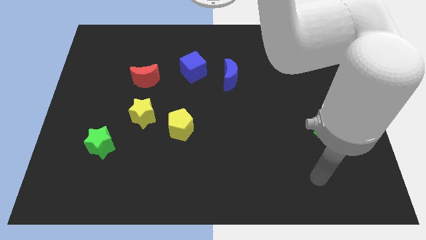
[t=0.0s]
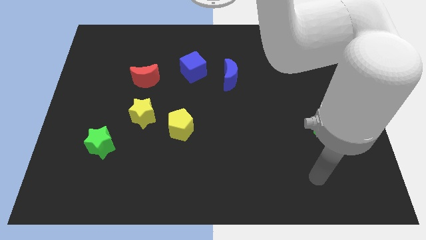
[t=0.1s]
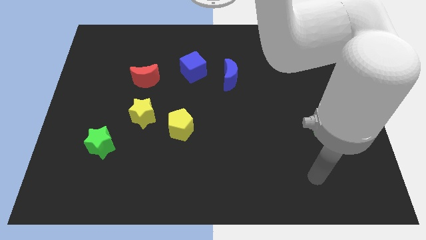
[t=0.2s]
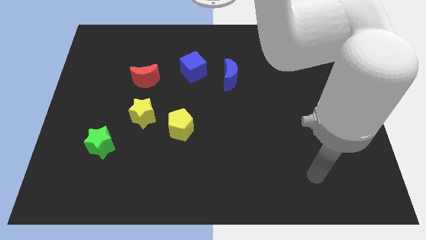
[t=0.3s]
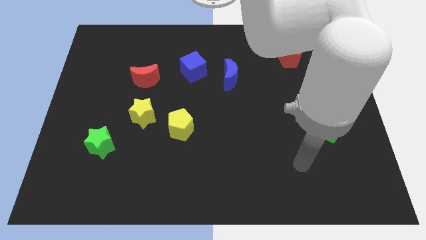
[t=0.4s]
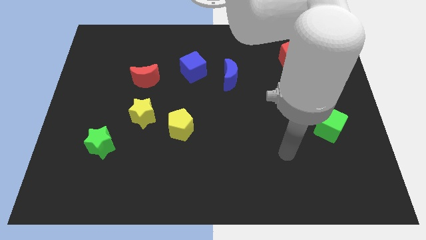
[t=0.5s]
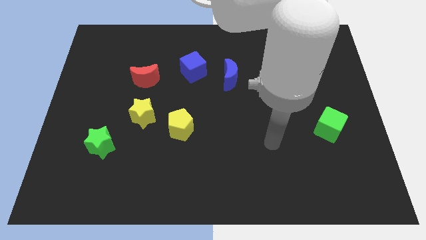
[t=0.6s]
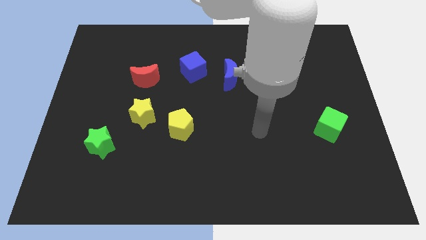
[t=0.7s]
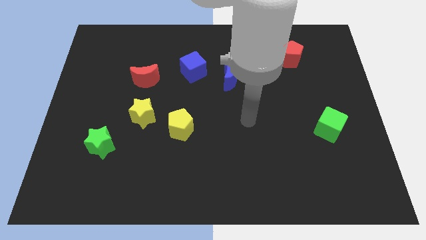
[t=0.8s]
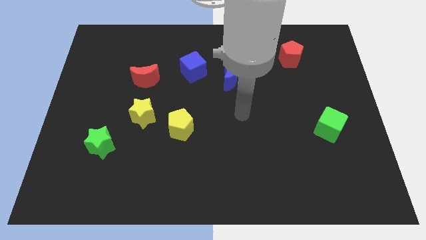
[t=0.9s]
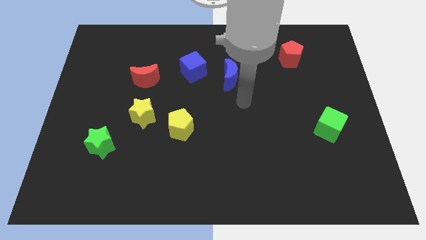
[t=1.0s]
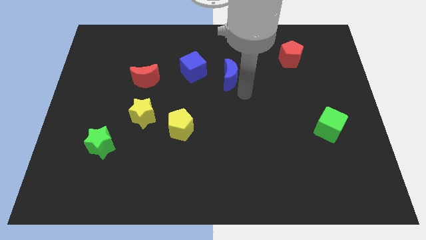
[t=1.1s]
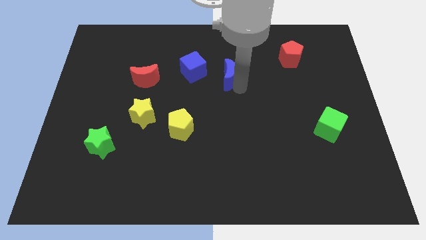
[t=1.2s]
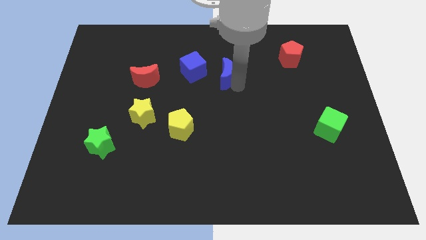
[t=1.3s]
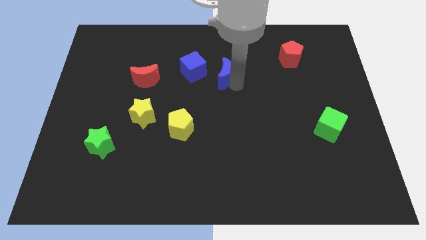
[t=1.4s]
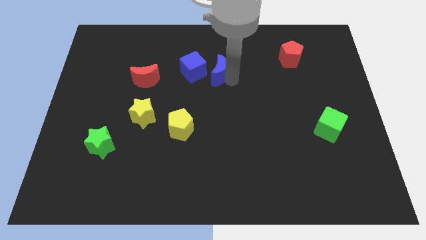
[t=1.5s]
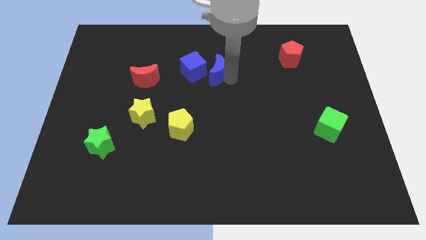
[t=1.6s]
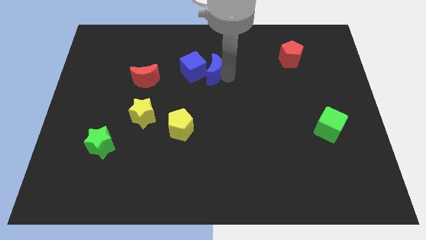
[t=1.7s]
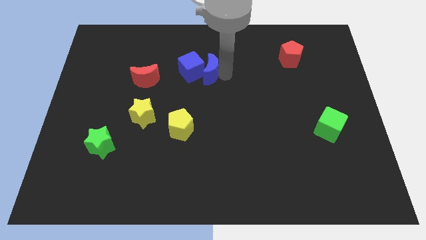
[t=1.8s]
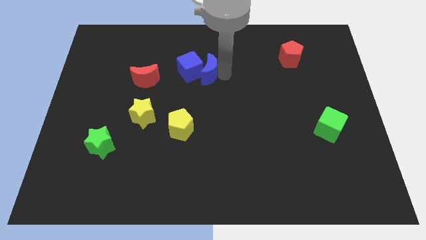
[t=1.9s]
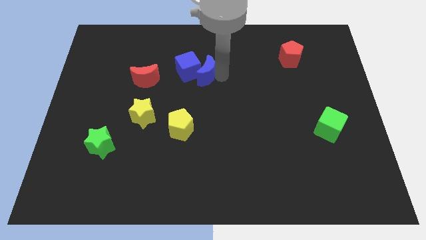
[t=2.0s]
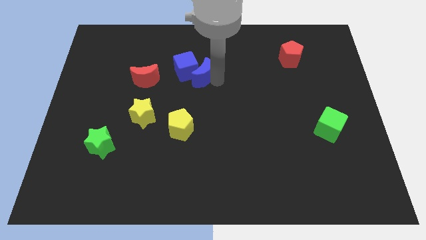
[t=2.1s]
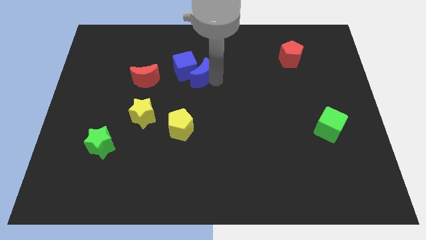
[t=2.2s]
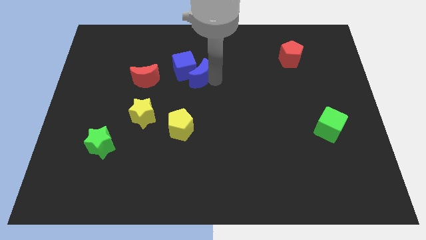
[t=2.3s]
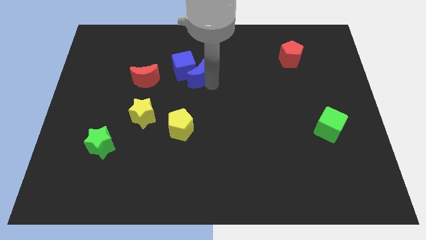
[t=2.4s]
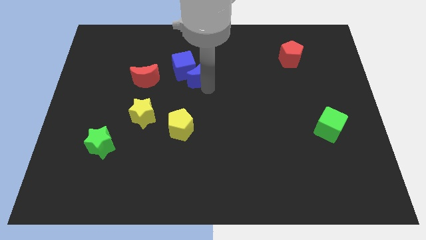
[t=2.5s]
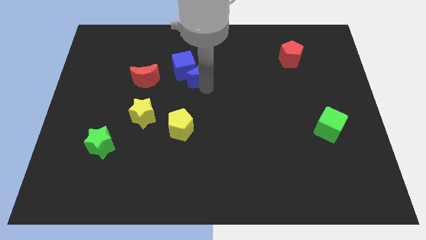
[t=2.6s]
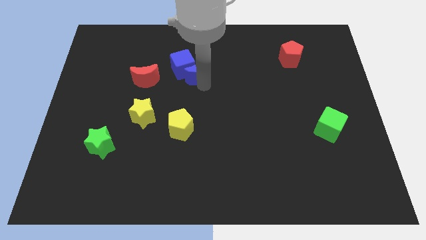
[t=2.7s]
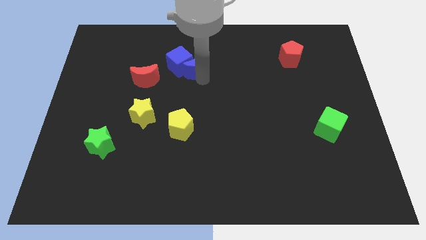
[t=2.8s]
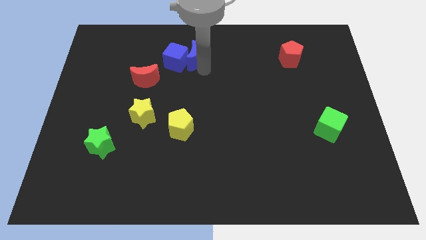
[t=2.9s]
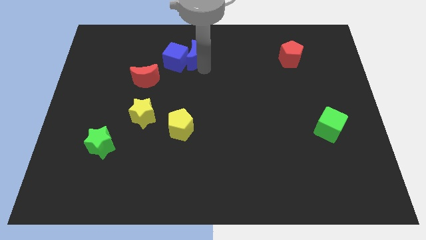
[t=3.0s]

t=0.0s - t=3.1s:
push the blue blocks to the top of the yellow pentagon

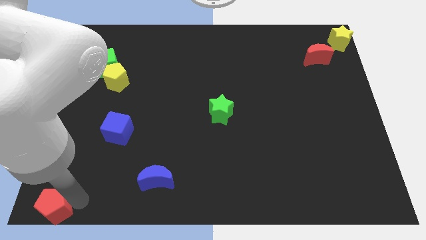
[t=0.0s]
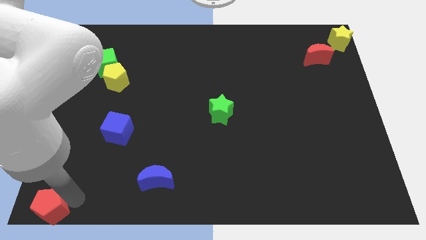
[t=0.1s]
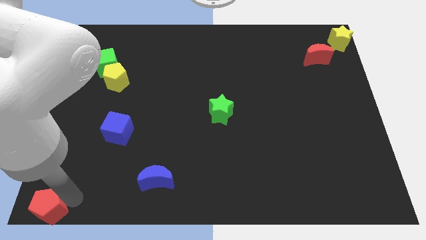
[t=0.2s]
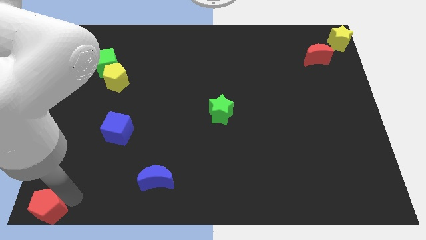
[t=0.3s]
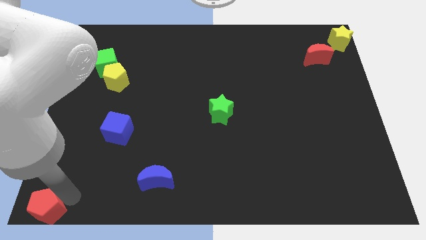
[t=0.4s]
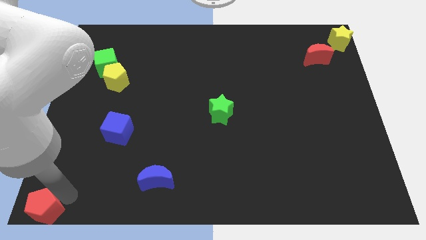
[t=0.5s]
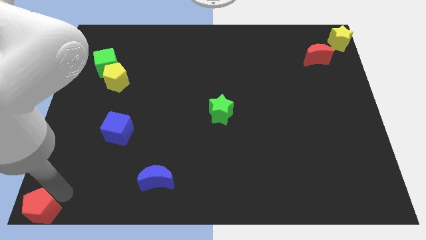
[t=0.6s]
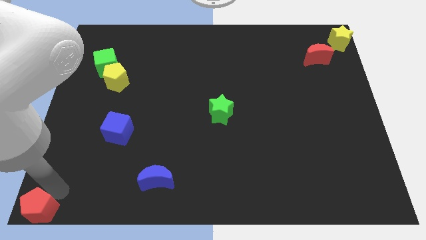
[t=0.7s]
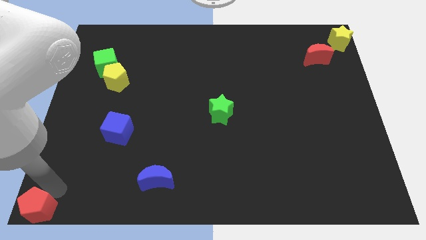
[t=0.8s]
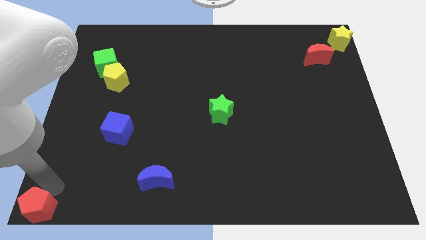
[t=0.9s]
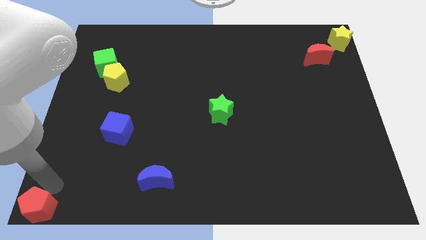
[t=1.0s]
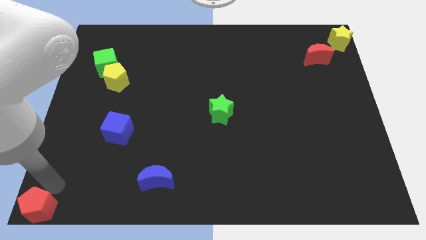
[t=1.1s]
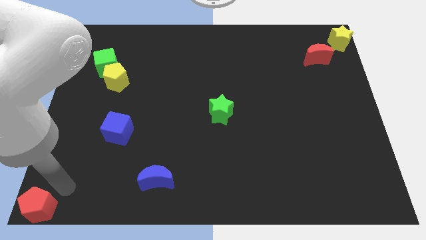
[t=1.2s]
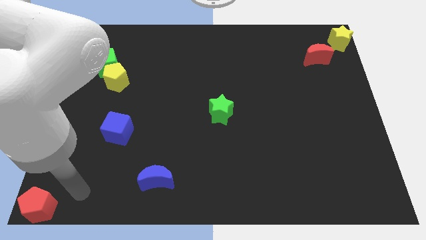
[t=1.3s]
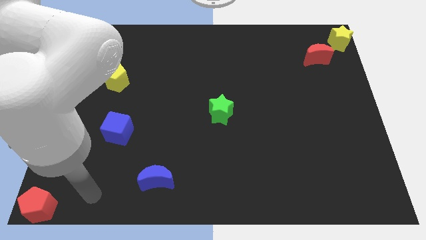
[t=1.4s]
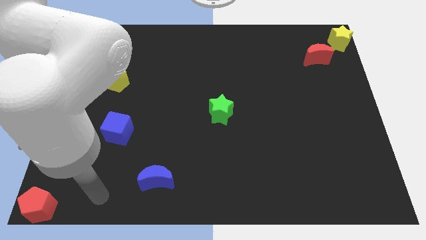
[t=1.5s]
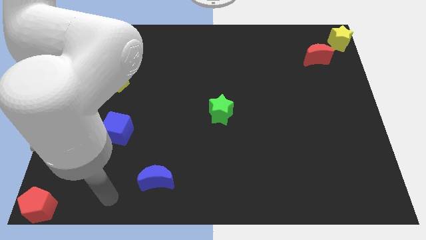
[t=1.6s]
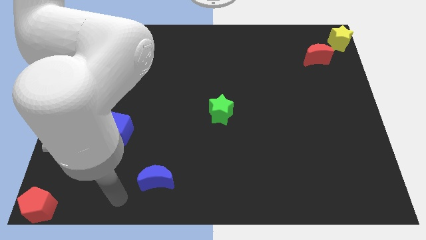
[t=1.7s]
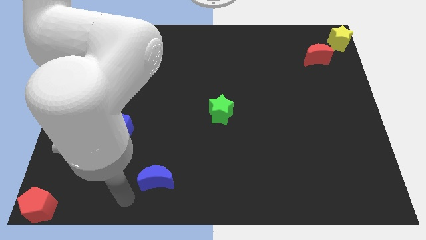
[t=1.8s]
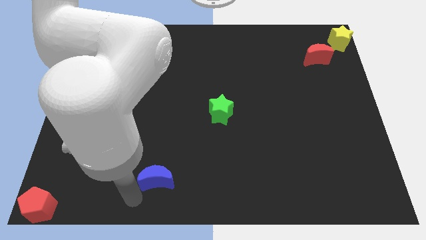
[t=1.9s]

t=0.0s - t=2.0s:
put the red pentagon at the bottom left corner

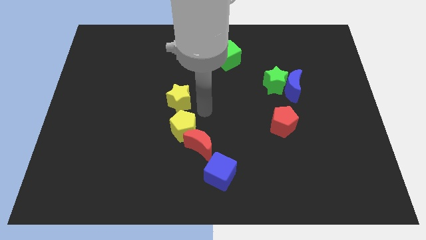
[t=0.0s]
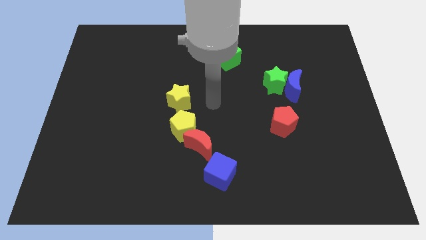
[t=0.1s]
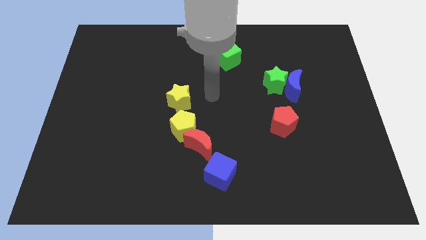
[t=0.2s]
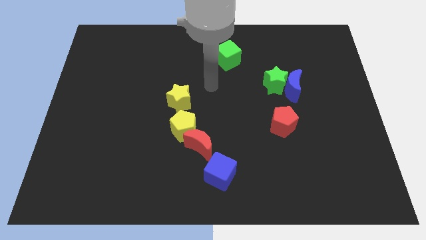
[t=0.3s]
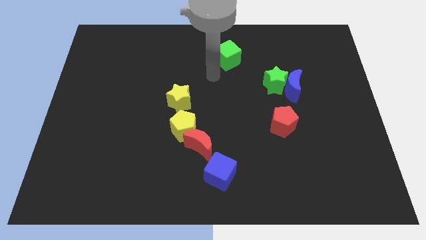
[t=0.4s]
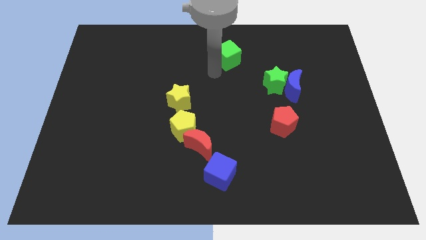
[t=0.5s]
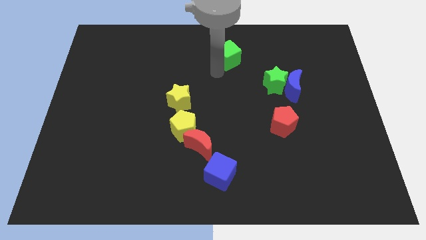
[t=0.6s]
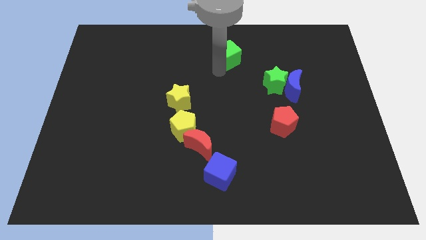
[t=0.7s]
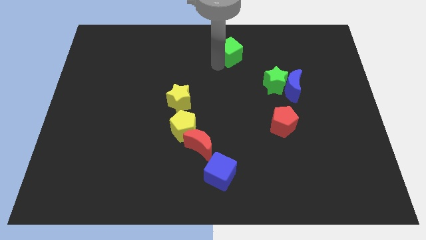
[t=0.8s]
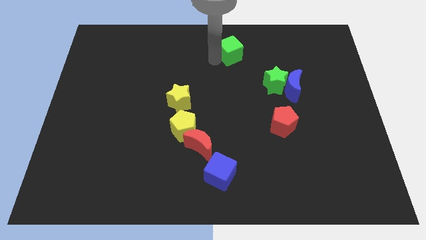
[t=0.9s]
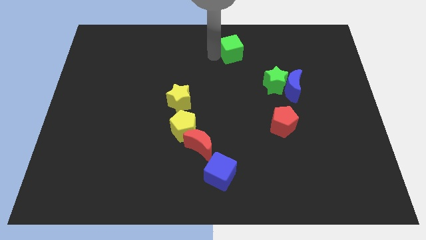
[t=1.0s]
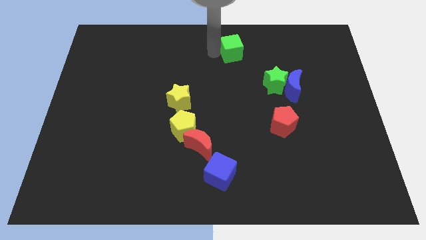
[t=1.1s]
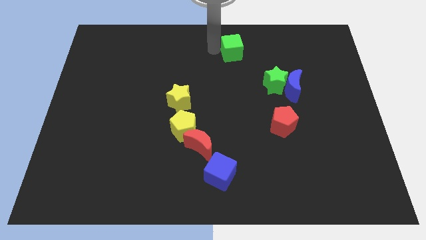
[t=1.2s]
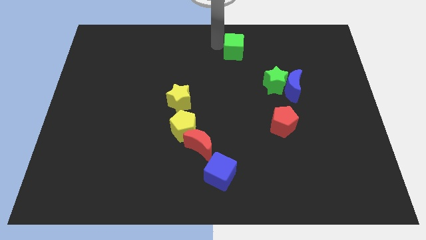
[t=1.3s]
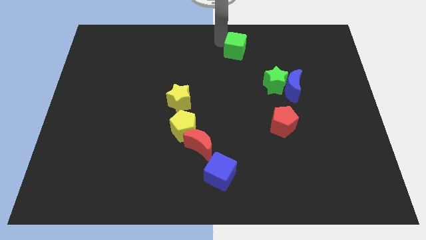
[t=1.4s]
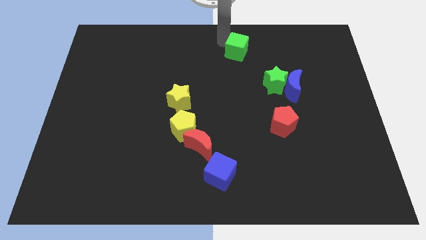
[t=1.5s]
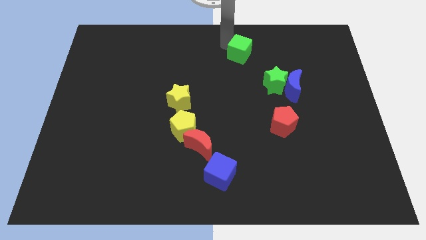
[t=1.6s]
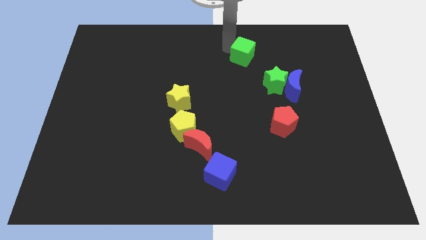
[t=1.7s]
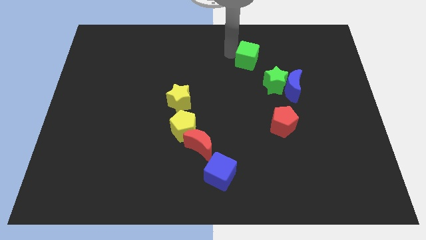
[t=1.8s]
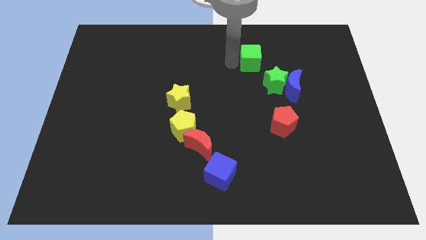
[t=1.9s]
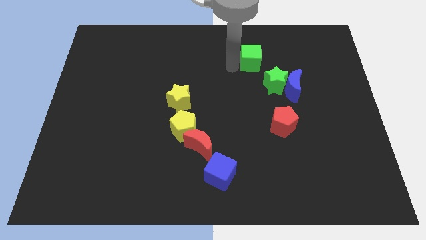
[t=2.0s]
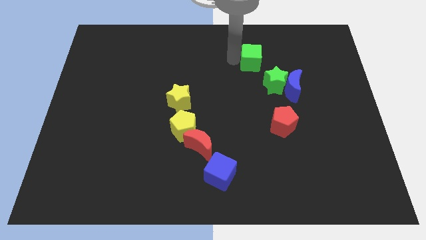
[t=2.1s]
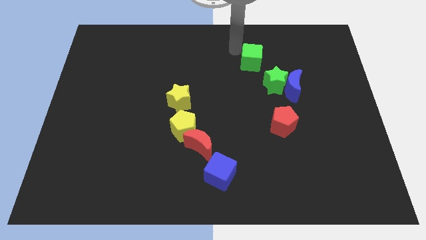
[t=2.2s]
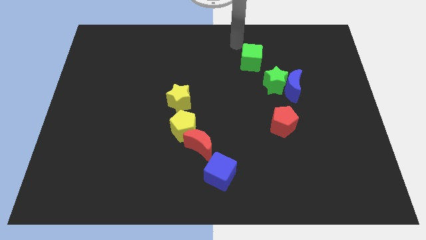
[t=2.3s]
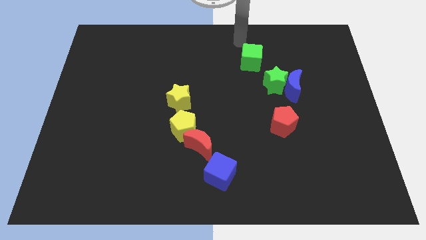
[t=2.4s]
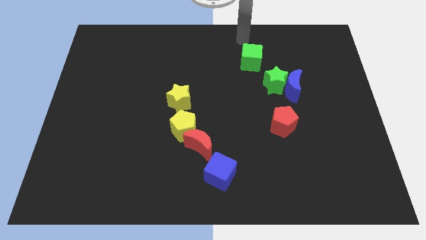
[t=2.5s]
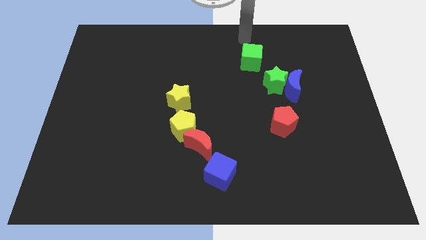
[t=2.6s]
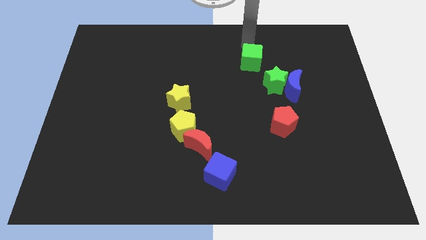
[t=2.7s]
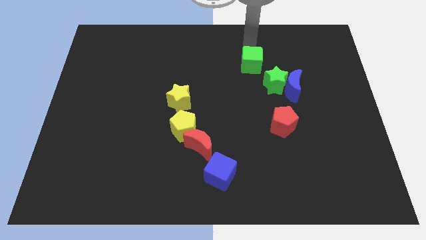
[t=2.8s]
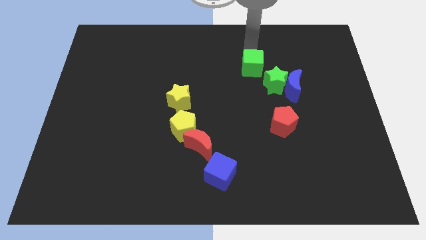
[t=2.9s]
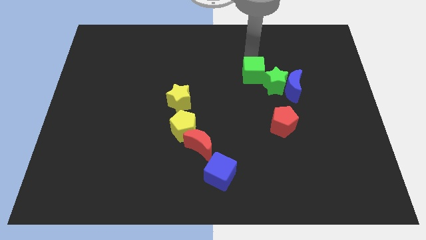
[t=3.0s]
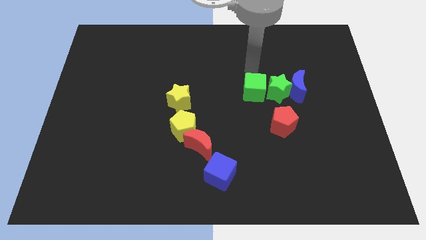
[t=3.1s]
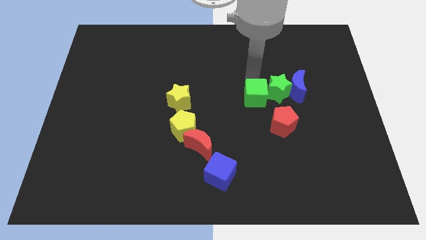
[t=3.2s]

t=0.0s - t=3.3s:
slide the green cube into the left side of the green star

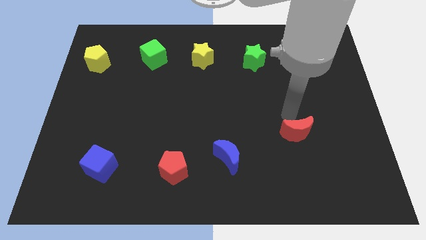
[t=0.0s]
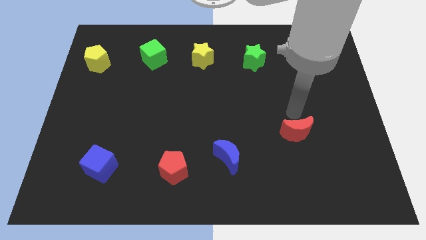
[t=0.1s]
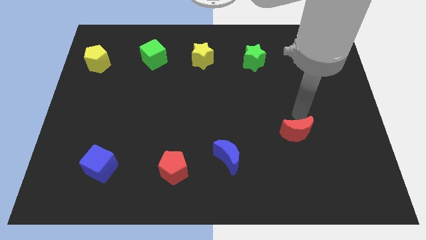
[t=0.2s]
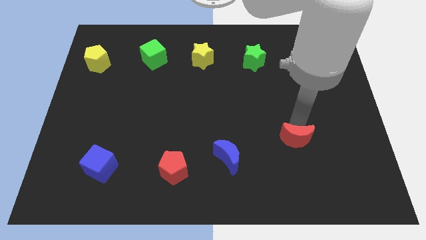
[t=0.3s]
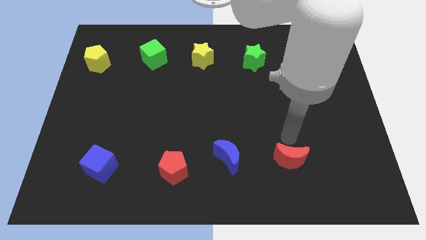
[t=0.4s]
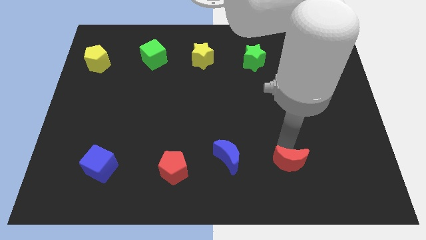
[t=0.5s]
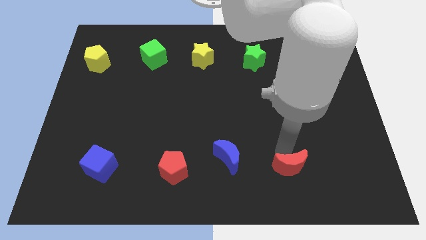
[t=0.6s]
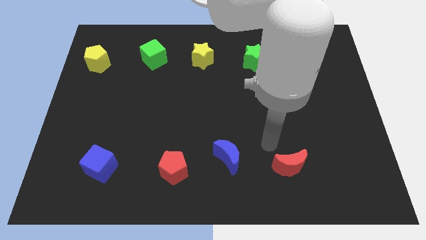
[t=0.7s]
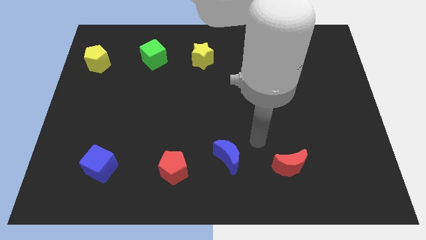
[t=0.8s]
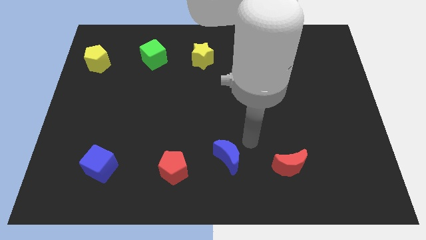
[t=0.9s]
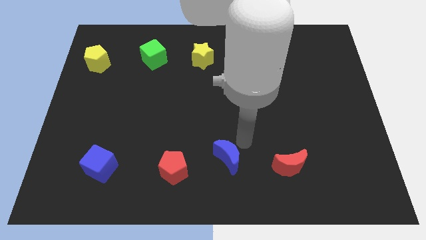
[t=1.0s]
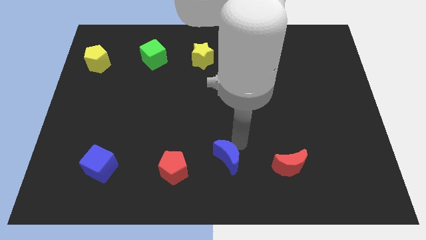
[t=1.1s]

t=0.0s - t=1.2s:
move the red moon to the right of the blue moon
